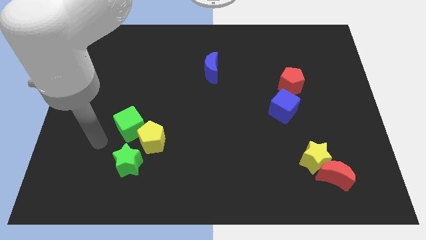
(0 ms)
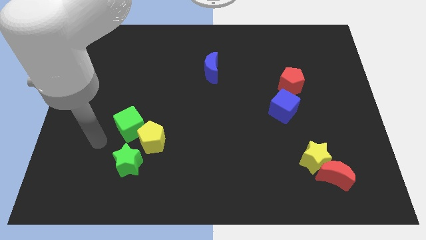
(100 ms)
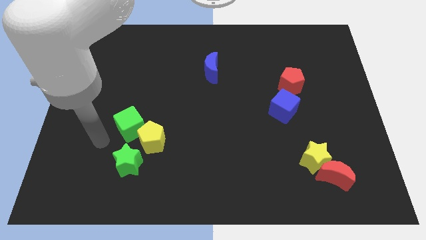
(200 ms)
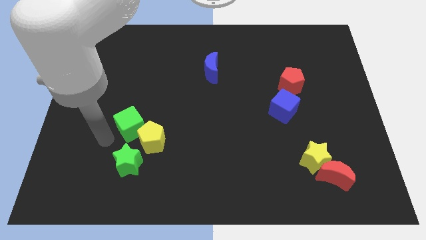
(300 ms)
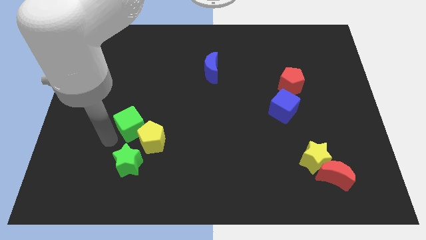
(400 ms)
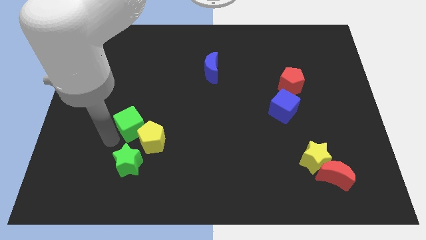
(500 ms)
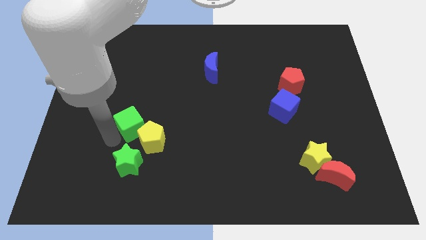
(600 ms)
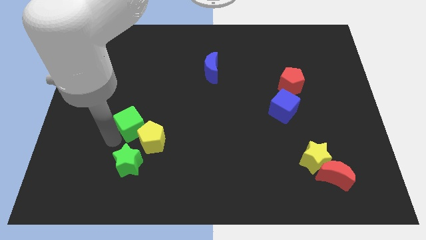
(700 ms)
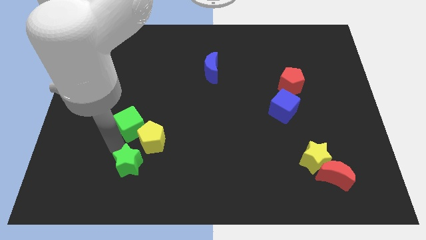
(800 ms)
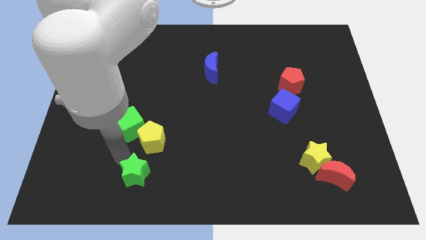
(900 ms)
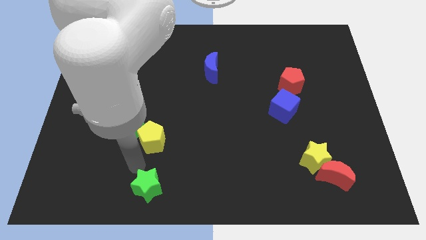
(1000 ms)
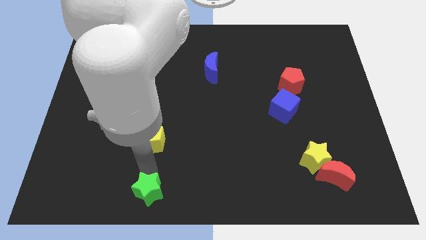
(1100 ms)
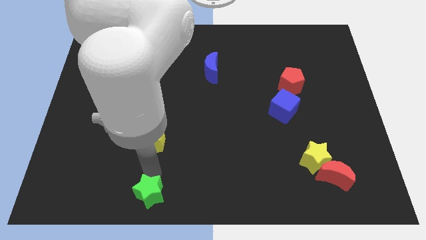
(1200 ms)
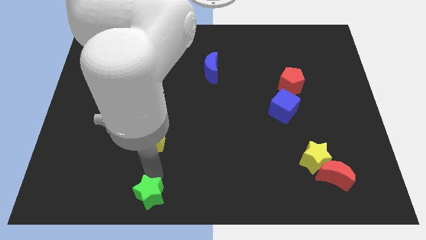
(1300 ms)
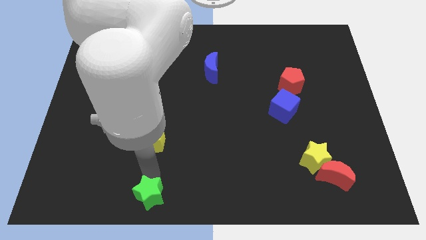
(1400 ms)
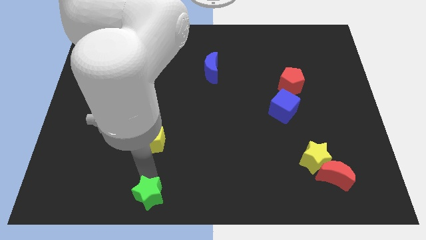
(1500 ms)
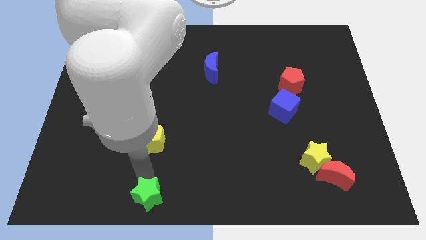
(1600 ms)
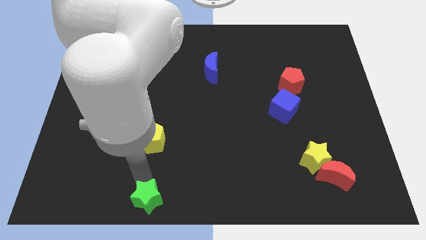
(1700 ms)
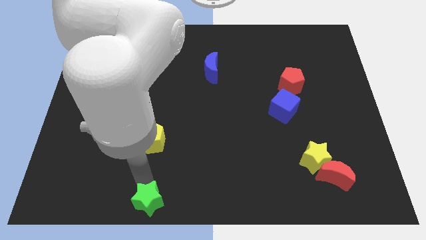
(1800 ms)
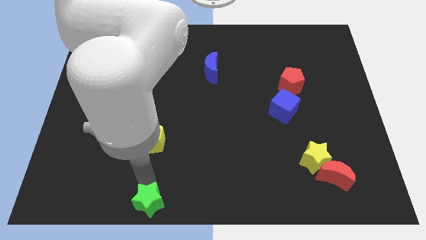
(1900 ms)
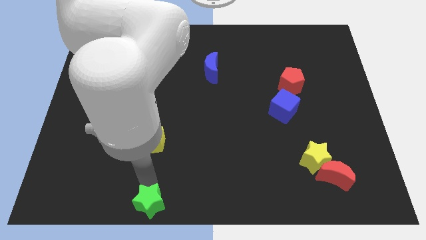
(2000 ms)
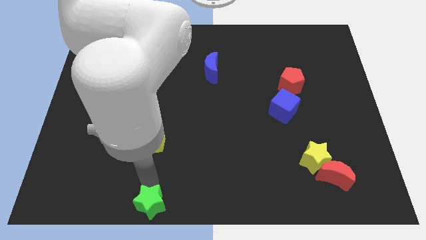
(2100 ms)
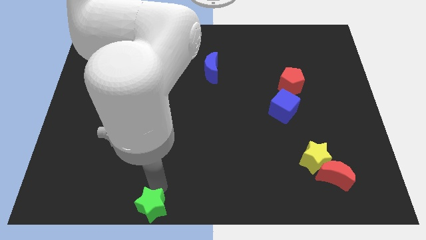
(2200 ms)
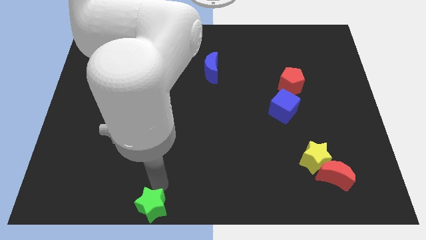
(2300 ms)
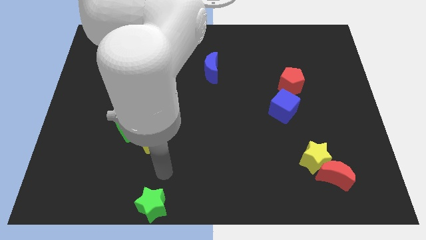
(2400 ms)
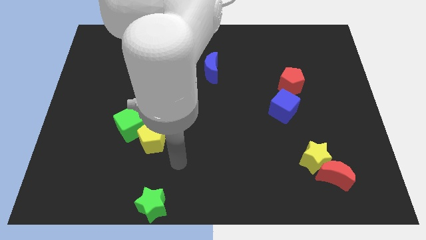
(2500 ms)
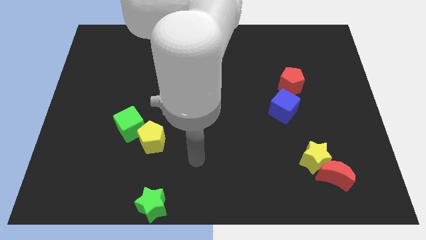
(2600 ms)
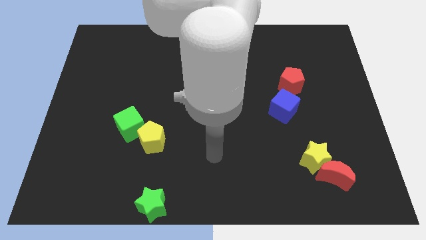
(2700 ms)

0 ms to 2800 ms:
move the green star to the bottom center of the board

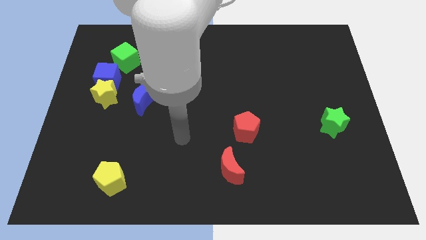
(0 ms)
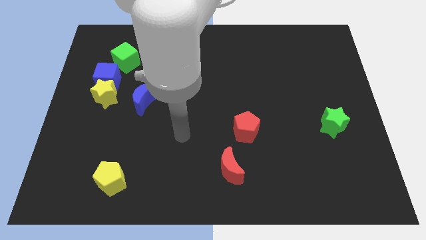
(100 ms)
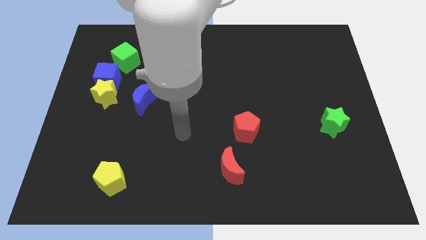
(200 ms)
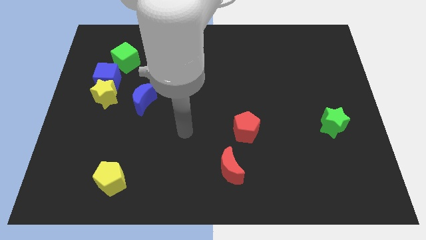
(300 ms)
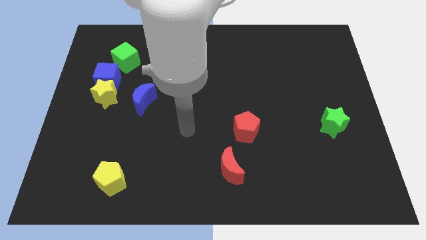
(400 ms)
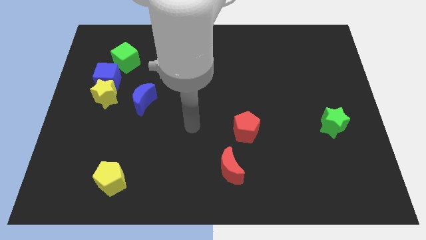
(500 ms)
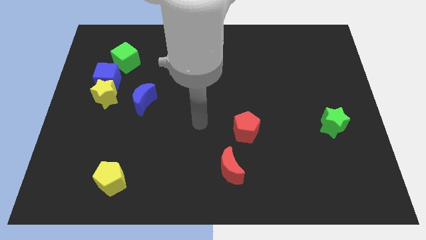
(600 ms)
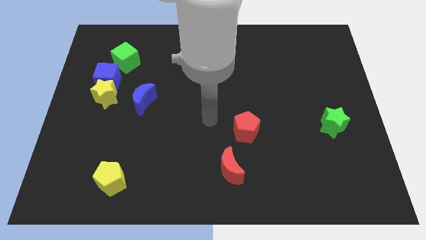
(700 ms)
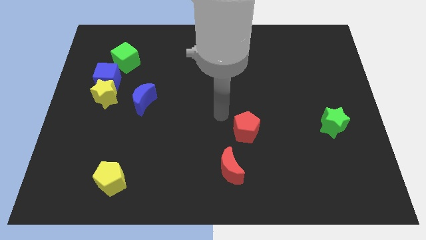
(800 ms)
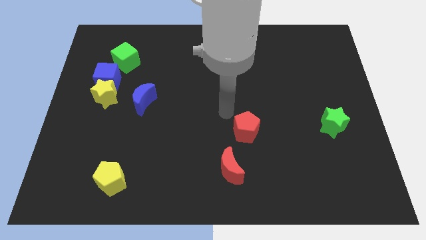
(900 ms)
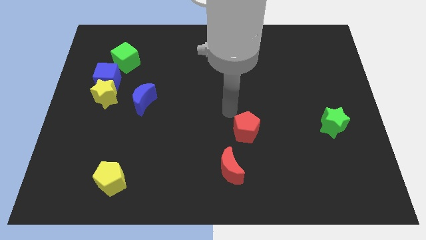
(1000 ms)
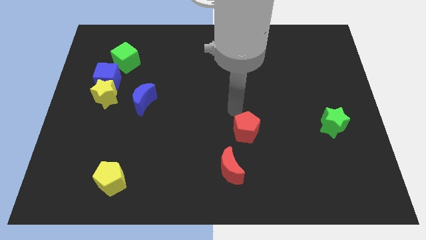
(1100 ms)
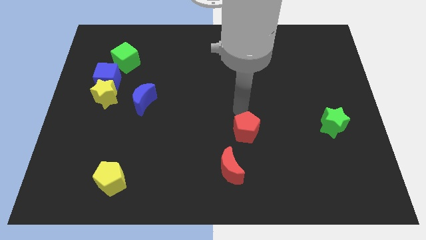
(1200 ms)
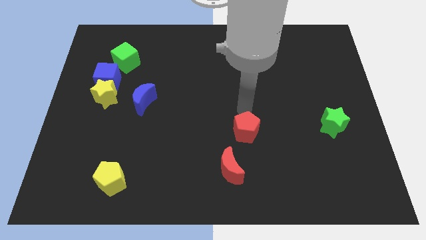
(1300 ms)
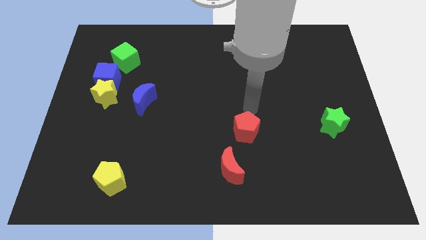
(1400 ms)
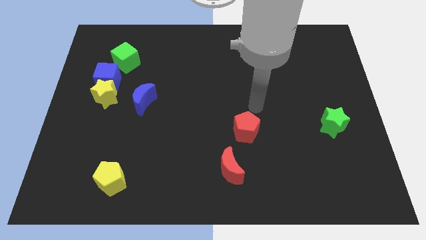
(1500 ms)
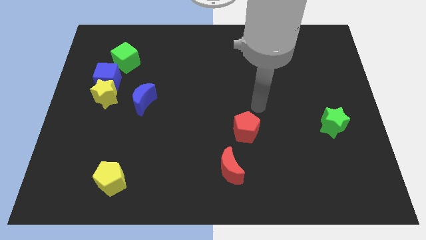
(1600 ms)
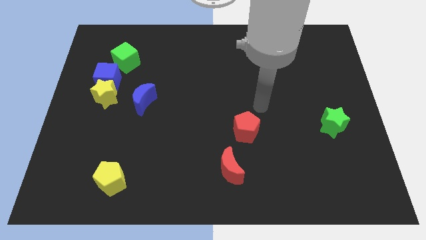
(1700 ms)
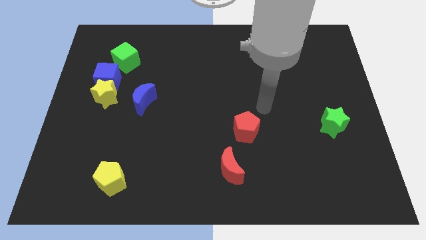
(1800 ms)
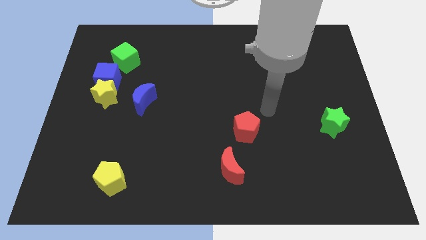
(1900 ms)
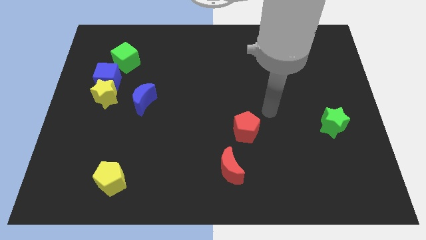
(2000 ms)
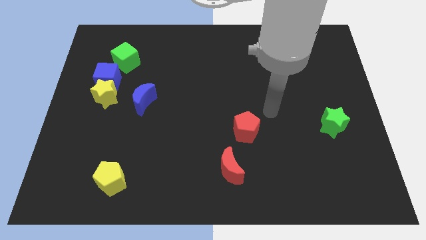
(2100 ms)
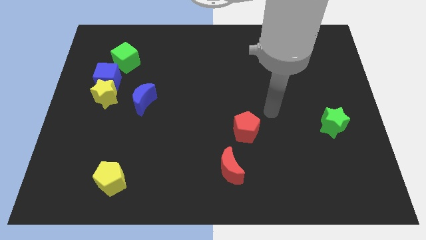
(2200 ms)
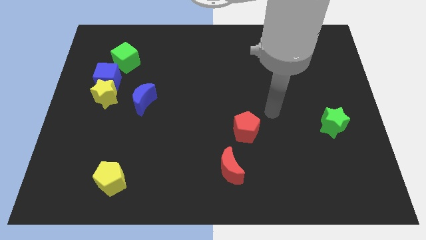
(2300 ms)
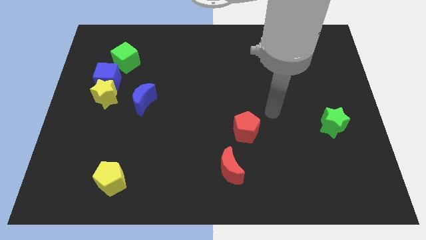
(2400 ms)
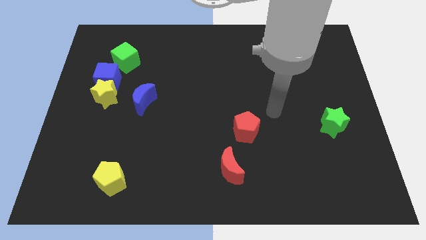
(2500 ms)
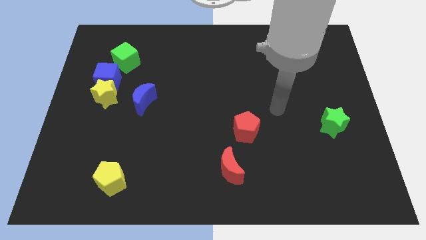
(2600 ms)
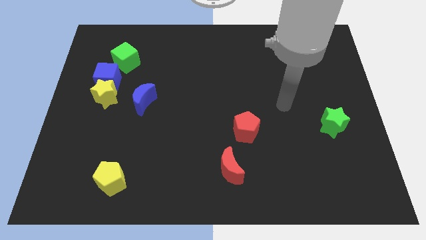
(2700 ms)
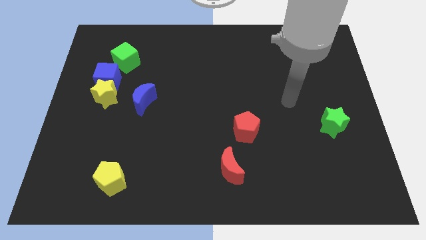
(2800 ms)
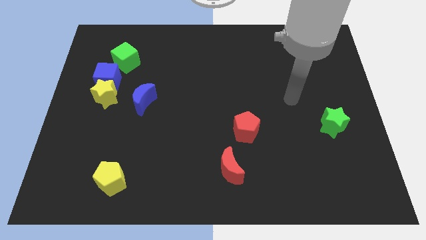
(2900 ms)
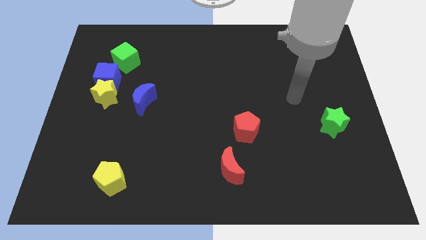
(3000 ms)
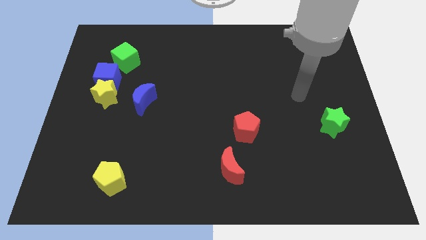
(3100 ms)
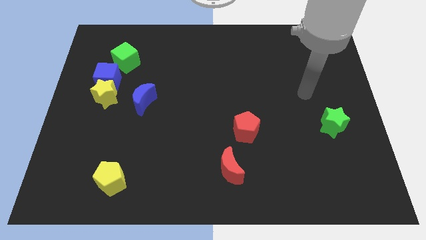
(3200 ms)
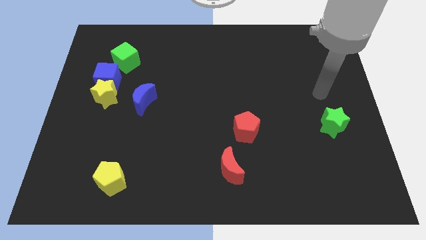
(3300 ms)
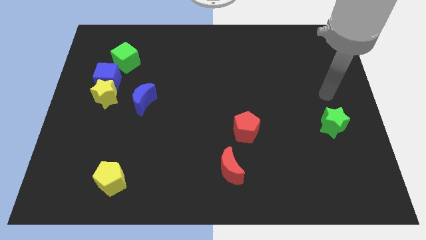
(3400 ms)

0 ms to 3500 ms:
move your hand towards the center right of the board

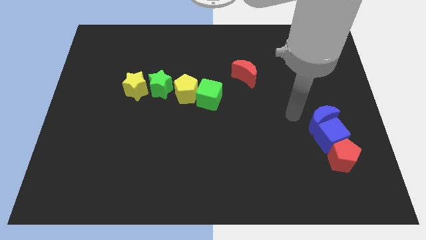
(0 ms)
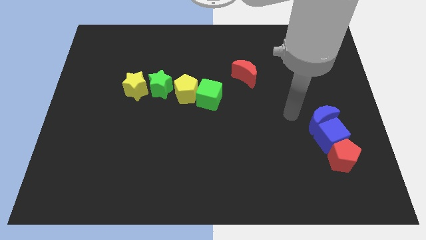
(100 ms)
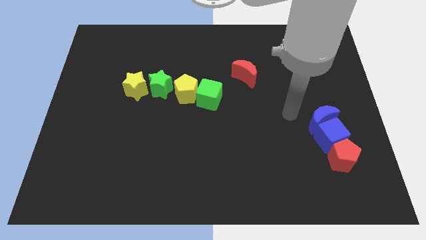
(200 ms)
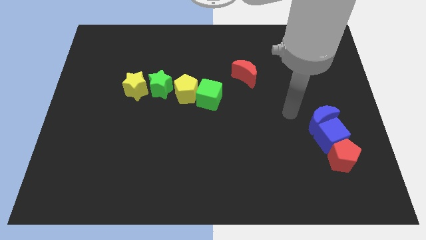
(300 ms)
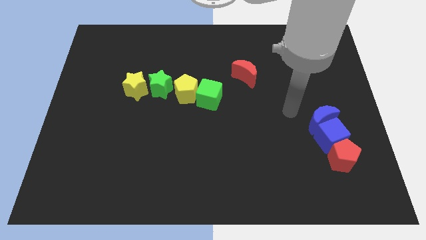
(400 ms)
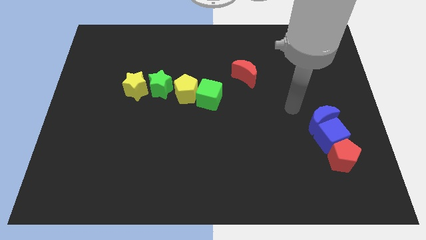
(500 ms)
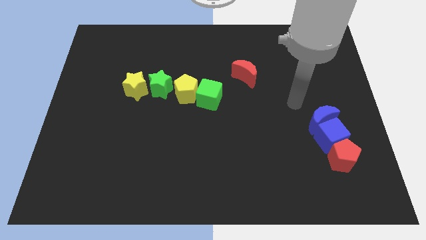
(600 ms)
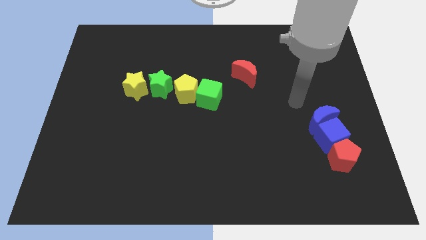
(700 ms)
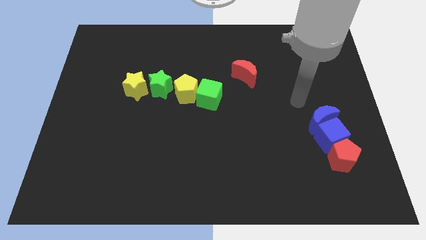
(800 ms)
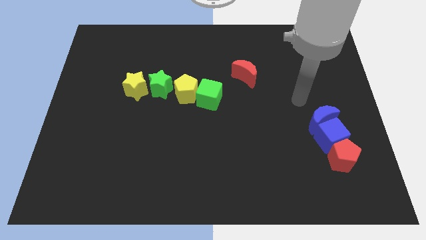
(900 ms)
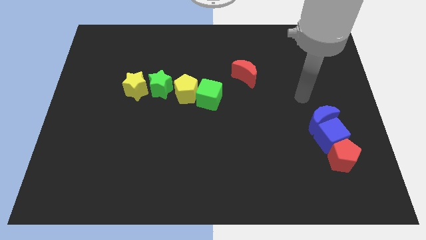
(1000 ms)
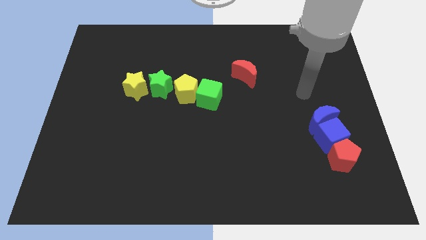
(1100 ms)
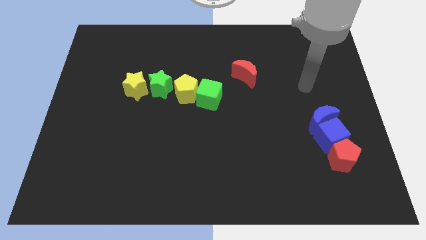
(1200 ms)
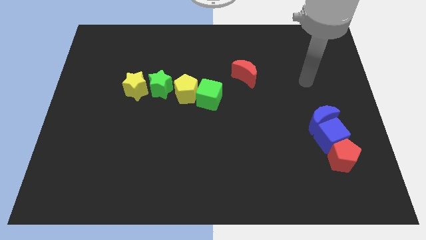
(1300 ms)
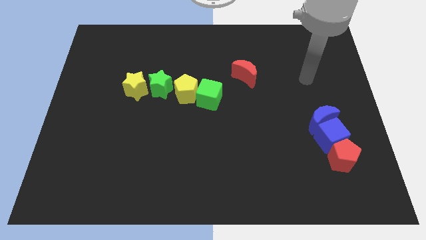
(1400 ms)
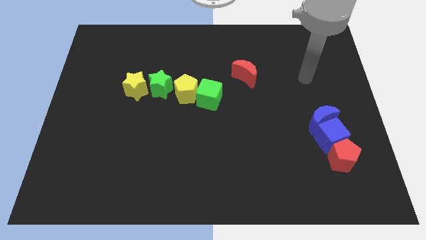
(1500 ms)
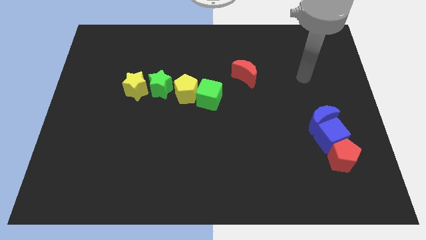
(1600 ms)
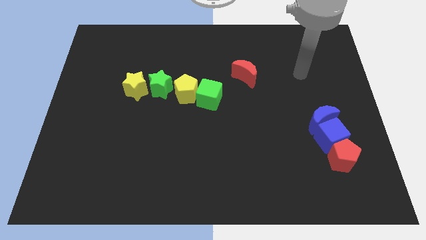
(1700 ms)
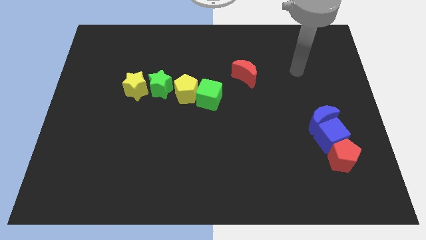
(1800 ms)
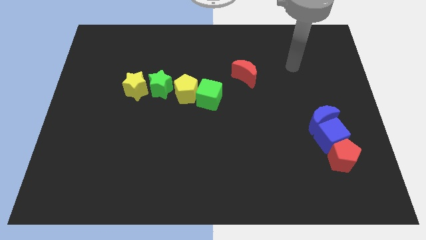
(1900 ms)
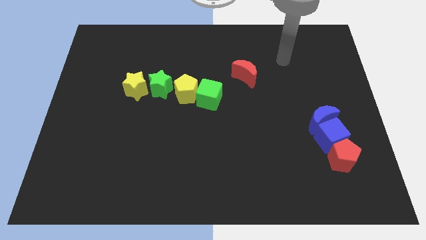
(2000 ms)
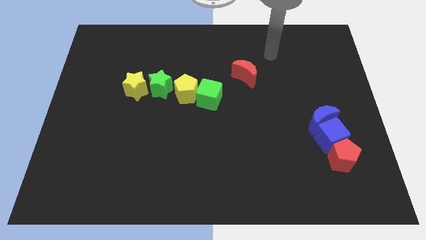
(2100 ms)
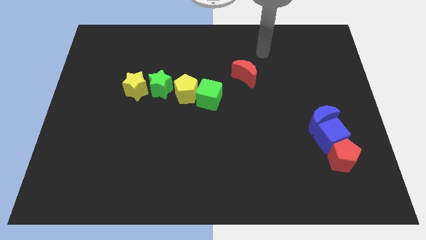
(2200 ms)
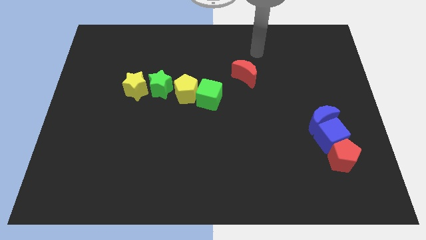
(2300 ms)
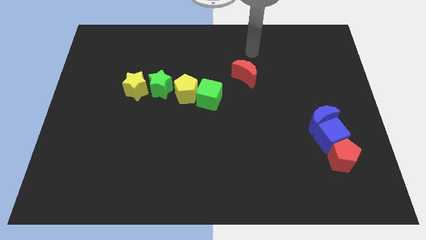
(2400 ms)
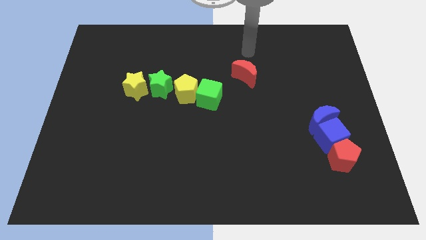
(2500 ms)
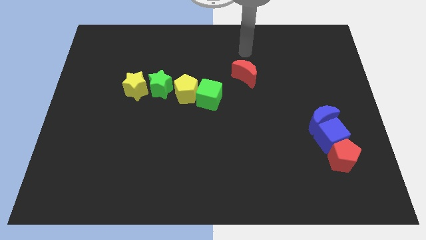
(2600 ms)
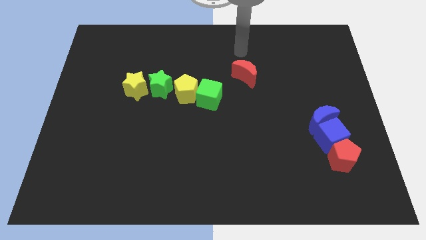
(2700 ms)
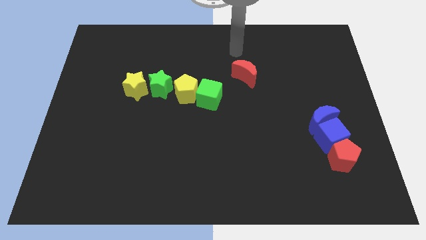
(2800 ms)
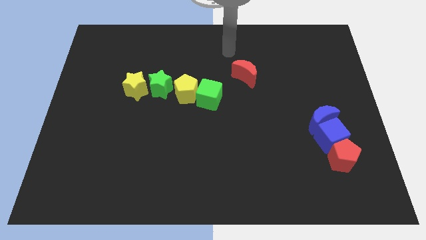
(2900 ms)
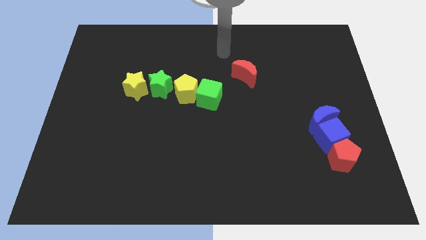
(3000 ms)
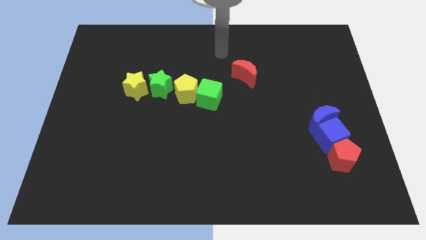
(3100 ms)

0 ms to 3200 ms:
move your arm away from the blue crescent
